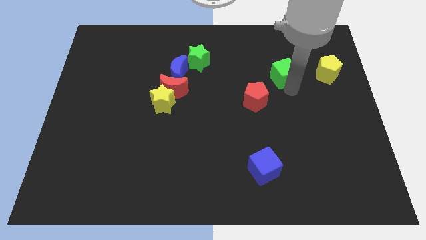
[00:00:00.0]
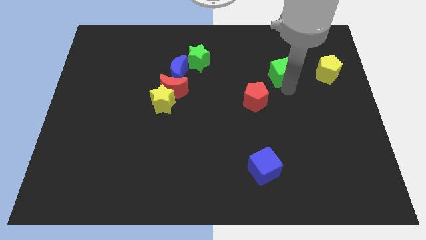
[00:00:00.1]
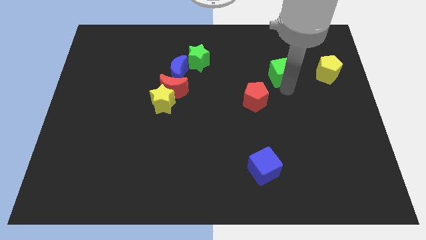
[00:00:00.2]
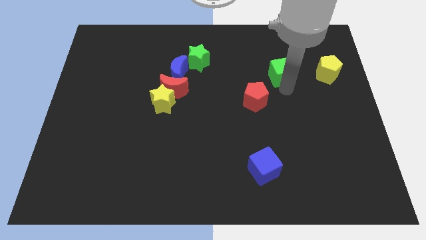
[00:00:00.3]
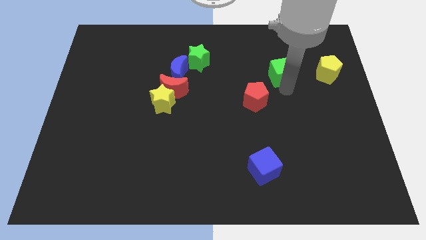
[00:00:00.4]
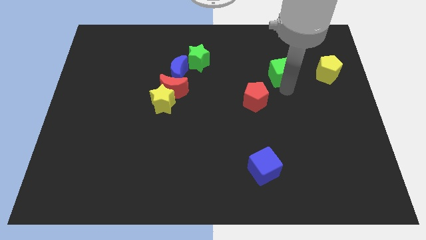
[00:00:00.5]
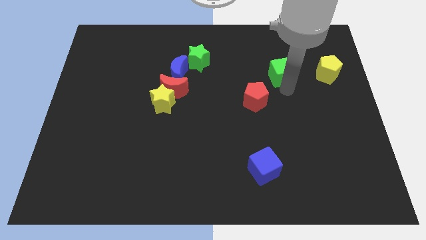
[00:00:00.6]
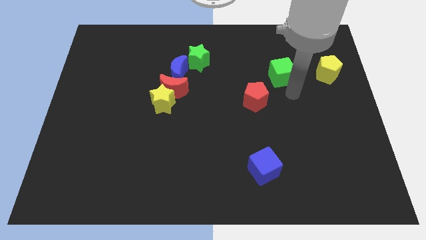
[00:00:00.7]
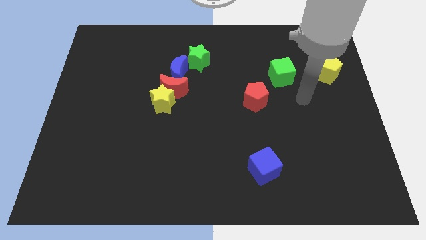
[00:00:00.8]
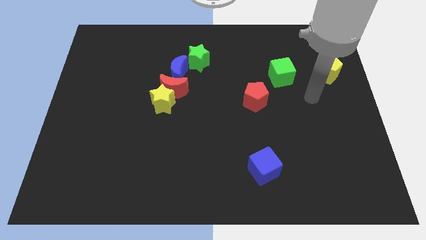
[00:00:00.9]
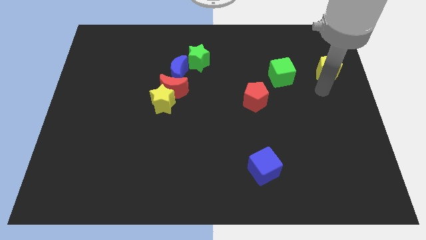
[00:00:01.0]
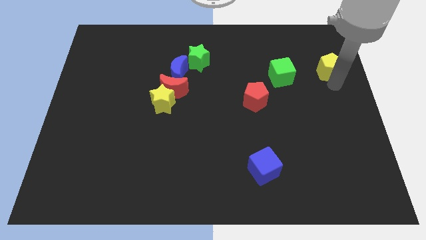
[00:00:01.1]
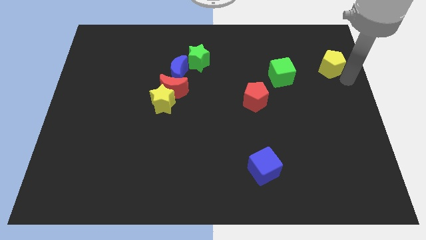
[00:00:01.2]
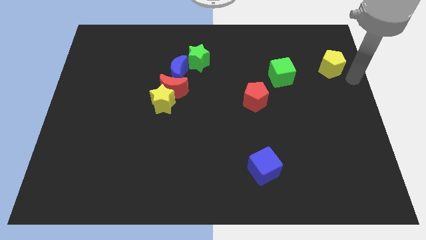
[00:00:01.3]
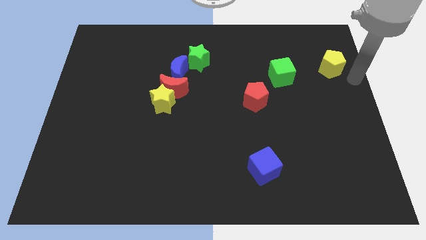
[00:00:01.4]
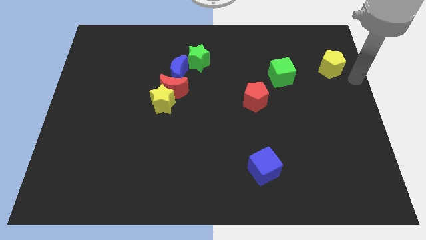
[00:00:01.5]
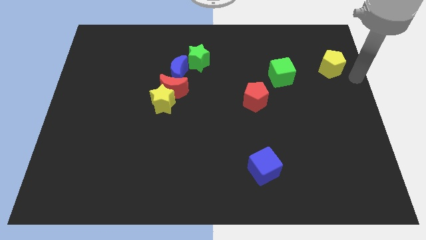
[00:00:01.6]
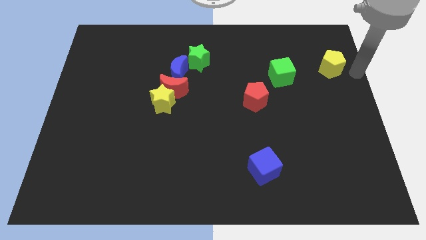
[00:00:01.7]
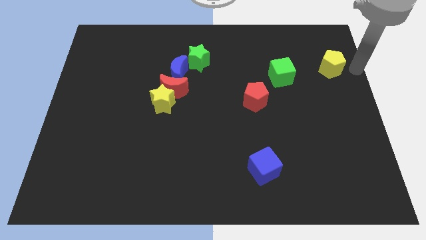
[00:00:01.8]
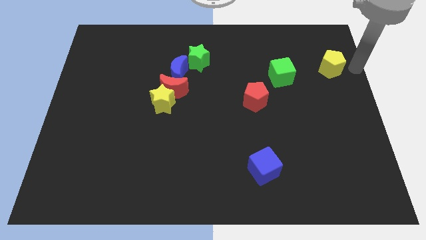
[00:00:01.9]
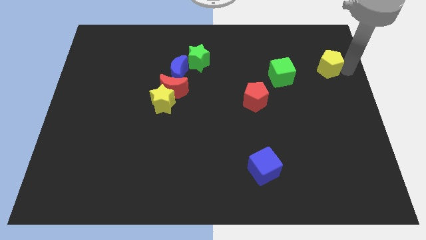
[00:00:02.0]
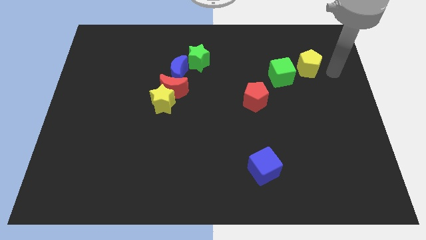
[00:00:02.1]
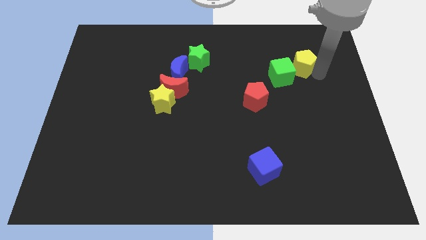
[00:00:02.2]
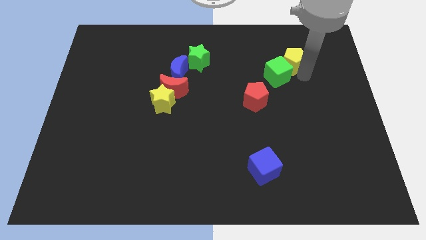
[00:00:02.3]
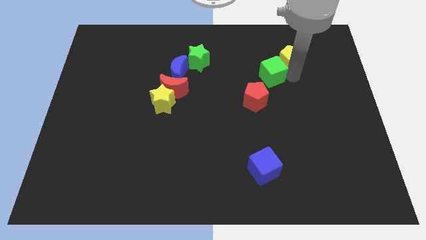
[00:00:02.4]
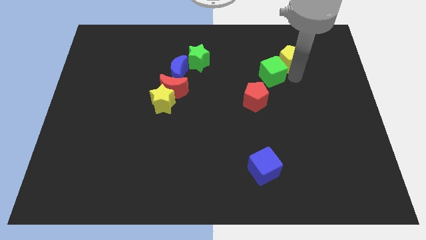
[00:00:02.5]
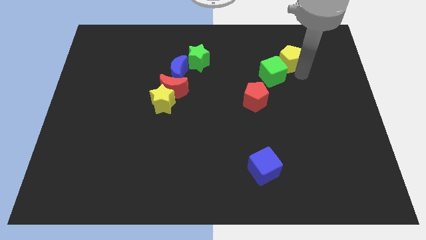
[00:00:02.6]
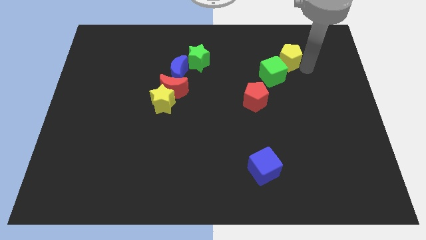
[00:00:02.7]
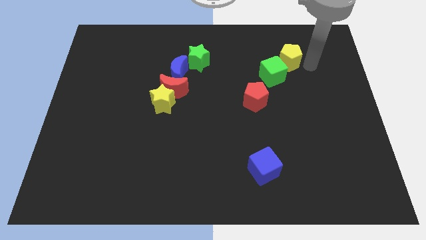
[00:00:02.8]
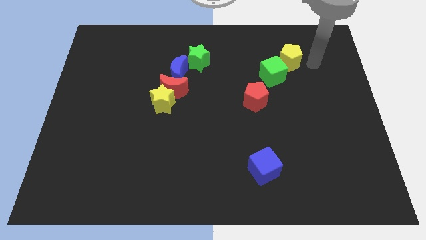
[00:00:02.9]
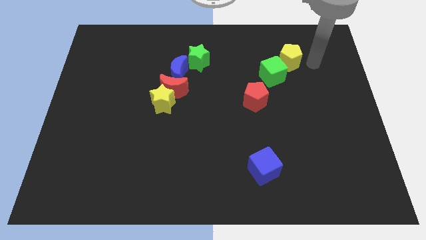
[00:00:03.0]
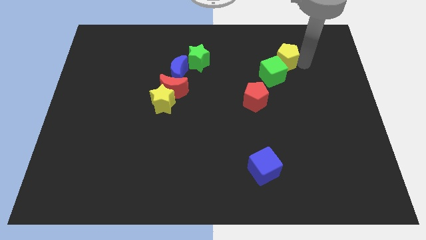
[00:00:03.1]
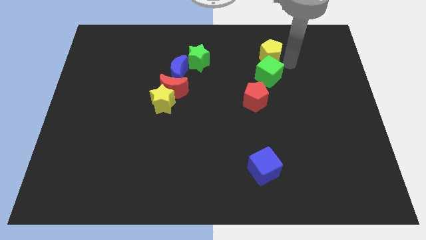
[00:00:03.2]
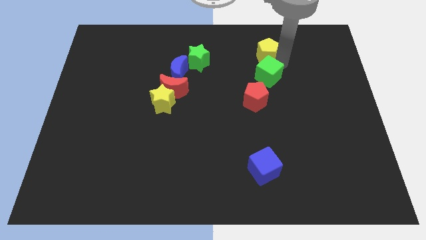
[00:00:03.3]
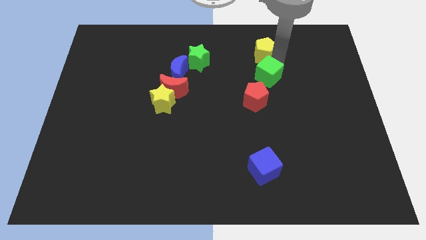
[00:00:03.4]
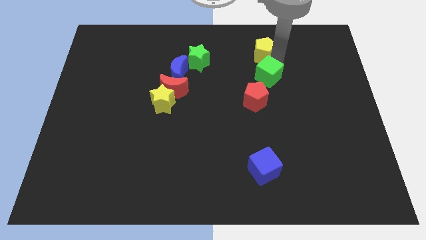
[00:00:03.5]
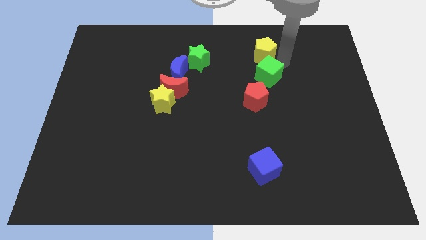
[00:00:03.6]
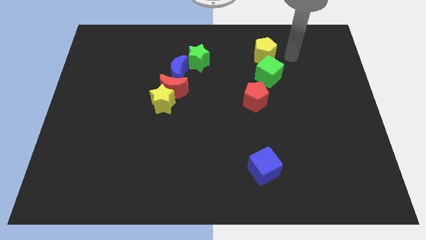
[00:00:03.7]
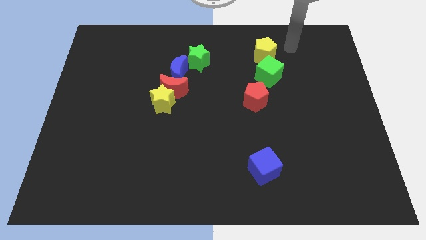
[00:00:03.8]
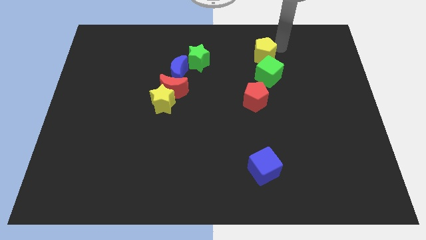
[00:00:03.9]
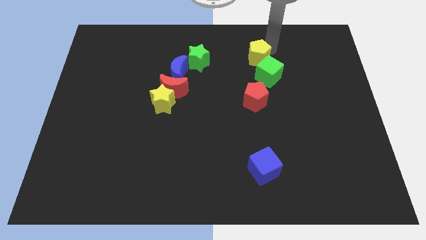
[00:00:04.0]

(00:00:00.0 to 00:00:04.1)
place the yellow pentagon above the green cube

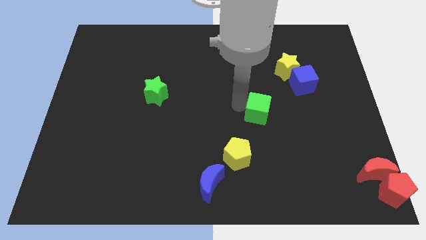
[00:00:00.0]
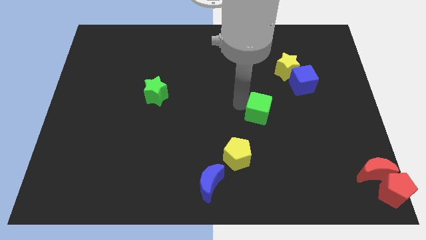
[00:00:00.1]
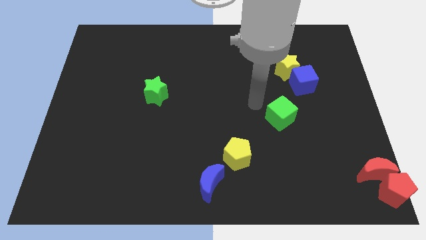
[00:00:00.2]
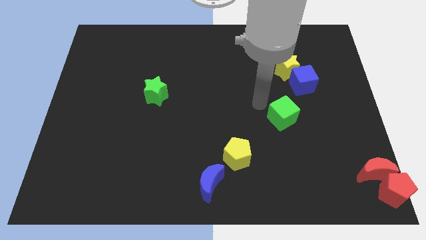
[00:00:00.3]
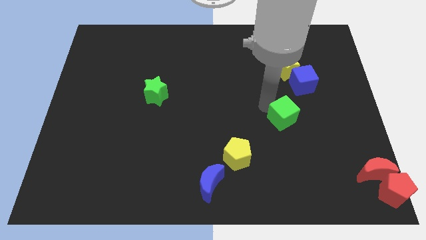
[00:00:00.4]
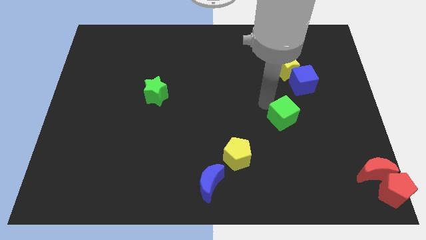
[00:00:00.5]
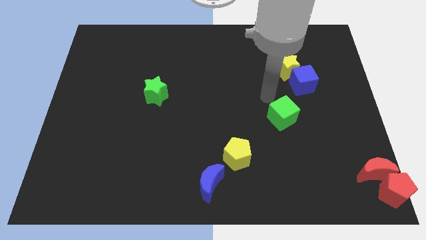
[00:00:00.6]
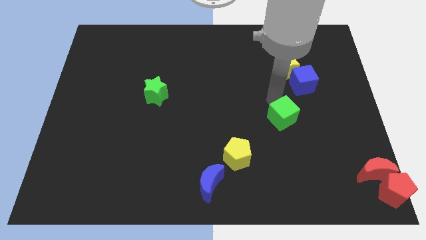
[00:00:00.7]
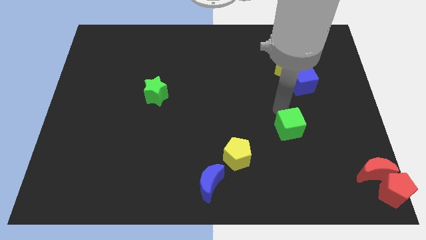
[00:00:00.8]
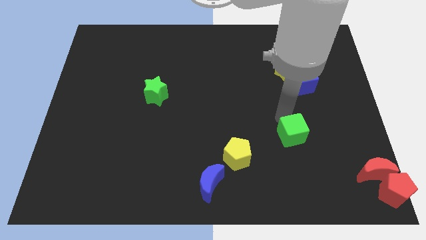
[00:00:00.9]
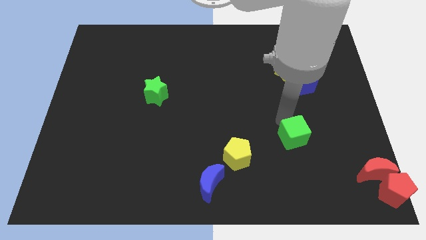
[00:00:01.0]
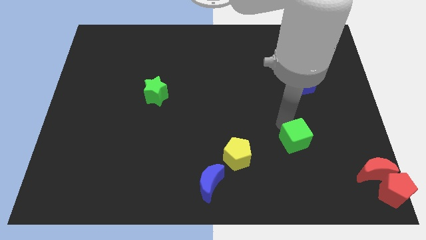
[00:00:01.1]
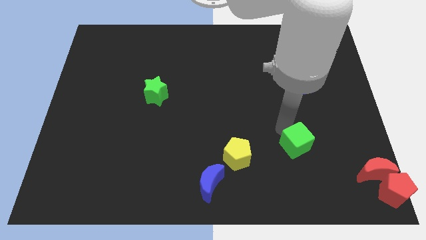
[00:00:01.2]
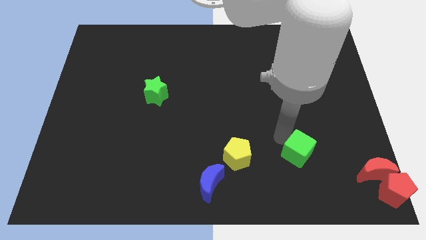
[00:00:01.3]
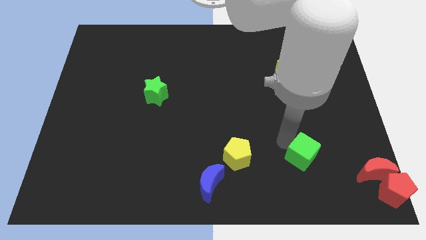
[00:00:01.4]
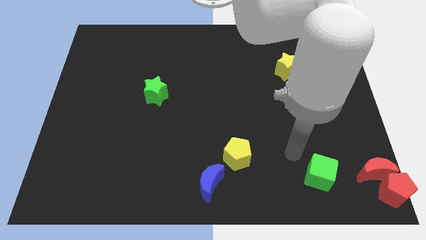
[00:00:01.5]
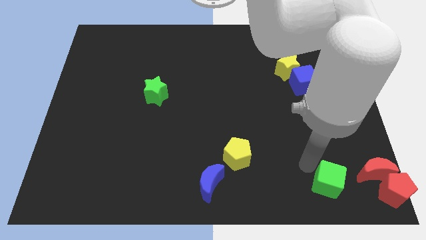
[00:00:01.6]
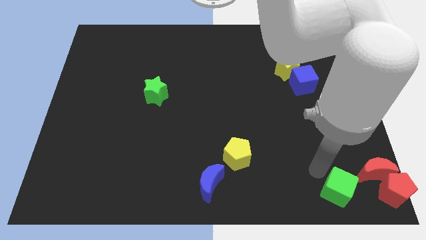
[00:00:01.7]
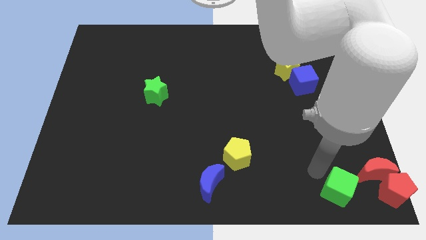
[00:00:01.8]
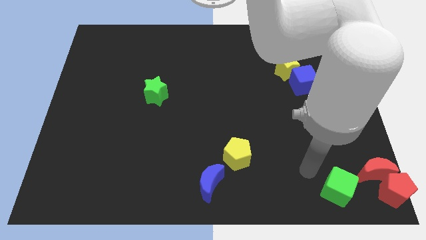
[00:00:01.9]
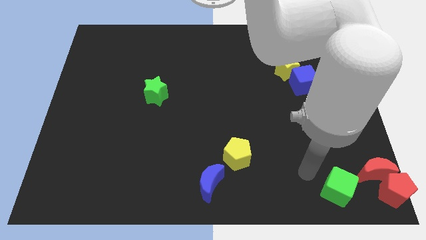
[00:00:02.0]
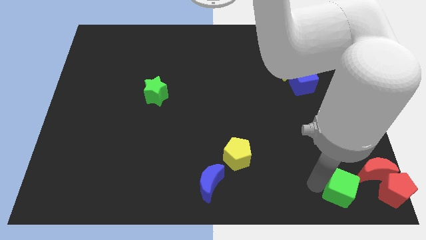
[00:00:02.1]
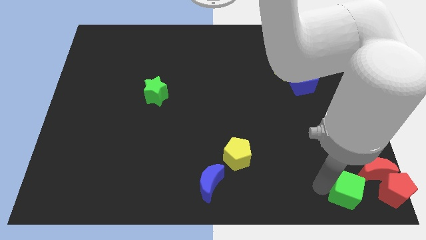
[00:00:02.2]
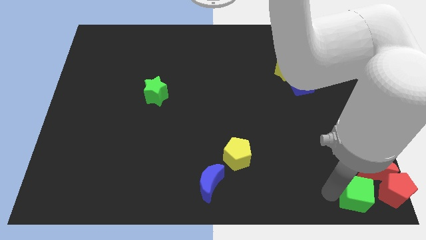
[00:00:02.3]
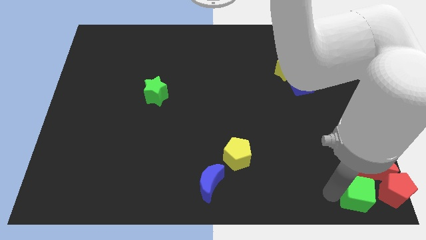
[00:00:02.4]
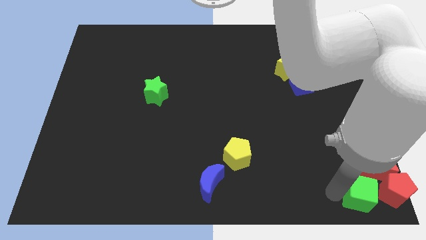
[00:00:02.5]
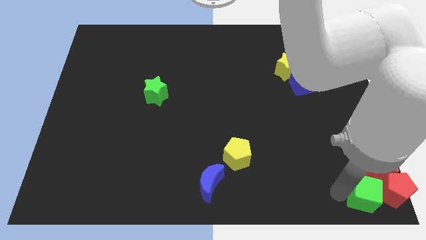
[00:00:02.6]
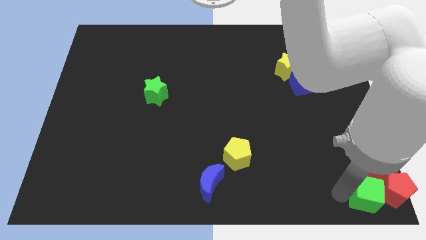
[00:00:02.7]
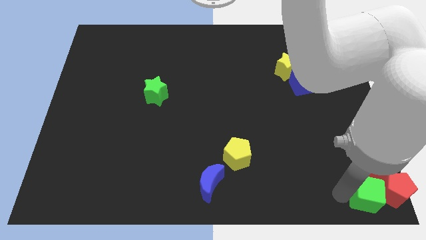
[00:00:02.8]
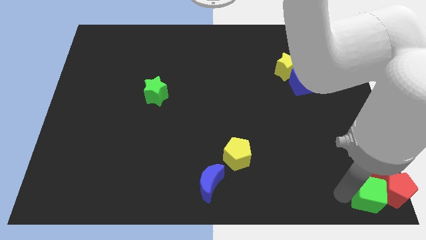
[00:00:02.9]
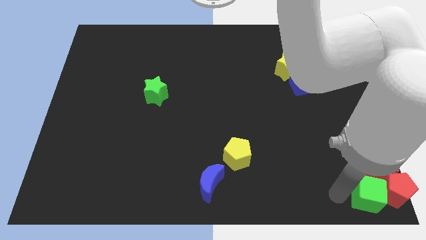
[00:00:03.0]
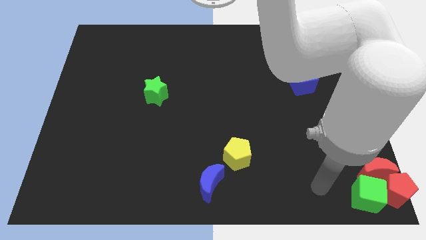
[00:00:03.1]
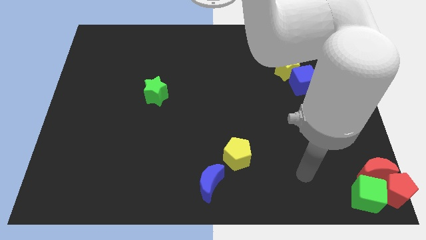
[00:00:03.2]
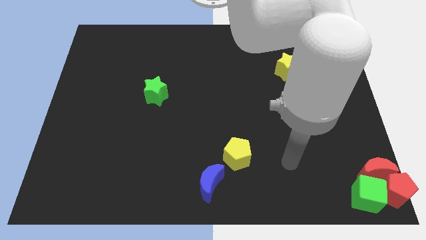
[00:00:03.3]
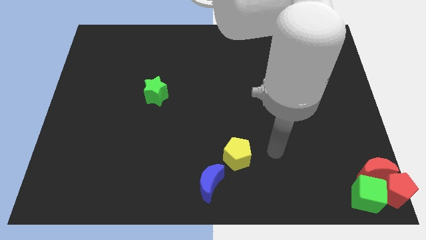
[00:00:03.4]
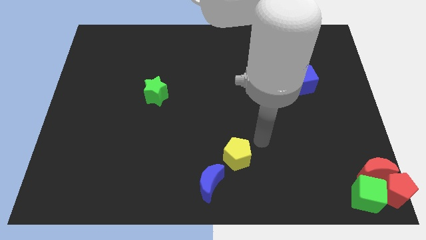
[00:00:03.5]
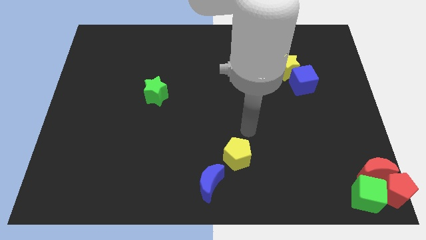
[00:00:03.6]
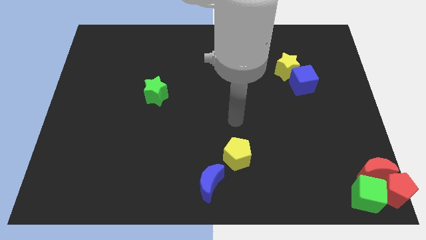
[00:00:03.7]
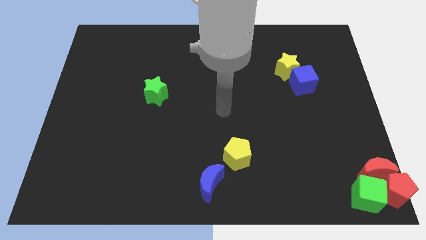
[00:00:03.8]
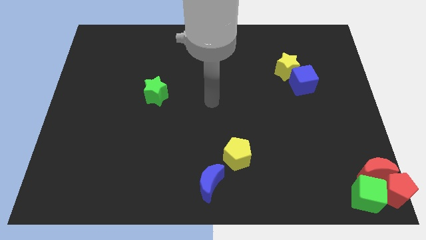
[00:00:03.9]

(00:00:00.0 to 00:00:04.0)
push the green cube into the red pentagon

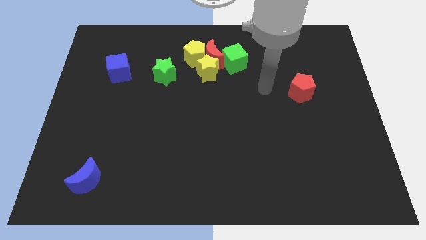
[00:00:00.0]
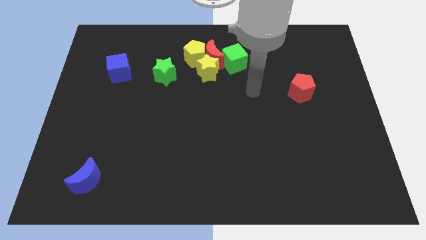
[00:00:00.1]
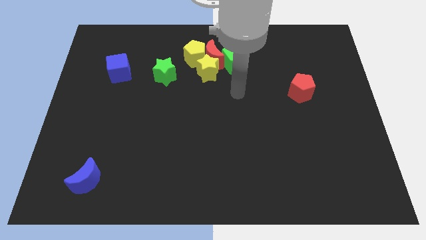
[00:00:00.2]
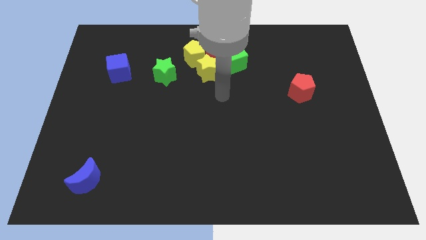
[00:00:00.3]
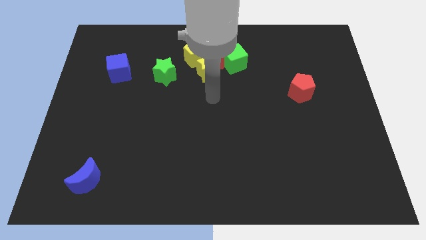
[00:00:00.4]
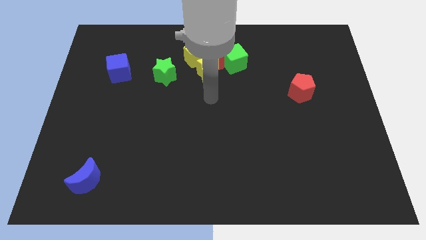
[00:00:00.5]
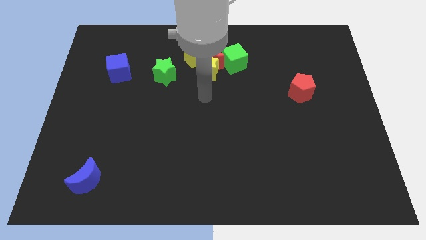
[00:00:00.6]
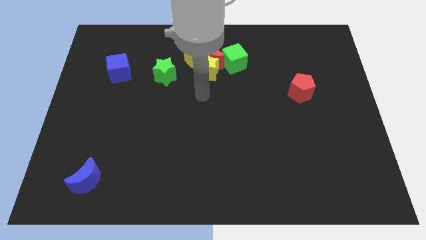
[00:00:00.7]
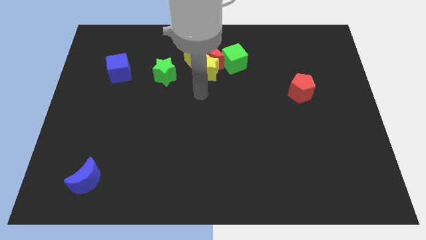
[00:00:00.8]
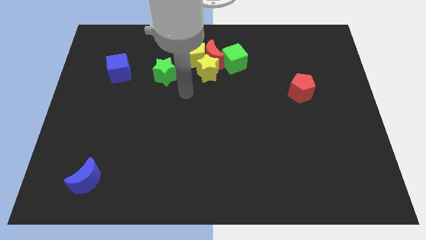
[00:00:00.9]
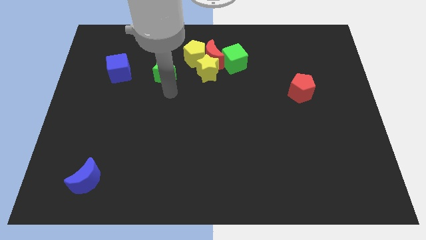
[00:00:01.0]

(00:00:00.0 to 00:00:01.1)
slide your arm below the green star
